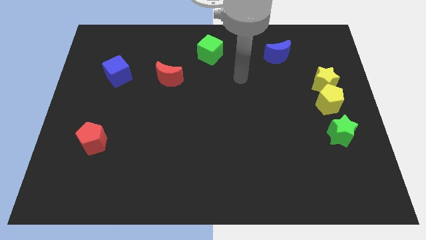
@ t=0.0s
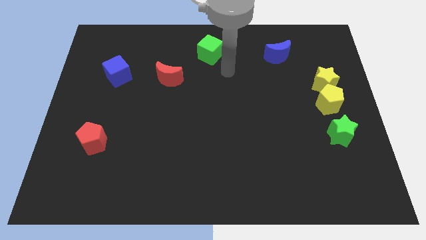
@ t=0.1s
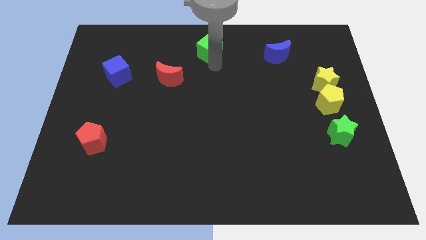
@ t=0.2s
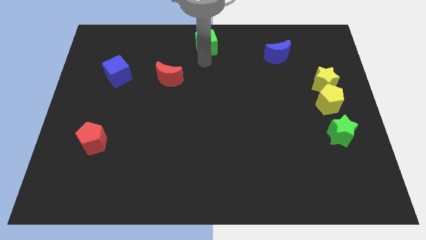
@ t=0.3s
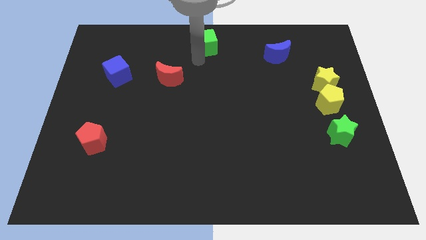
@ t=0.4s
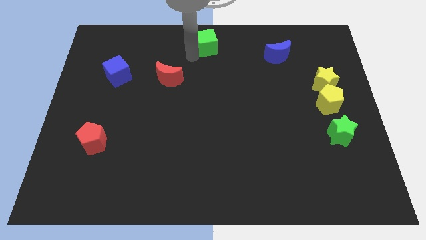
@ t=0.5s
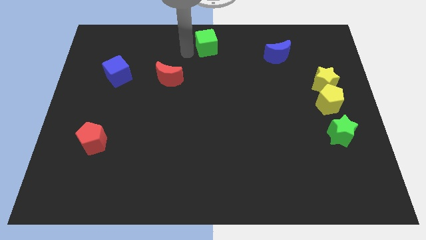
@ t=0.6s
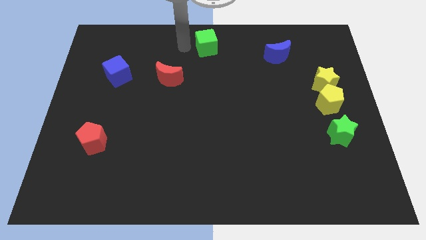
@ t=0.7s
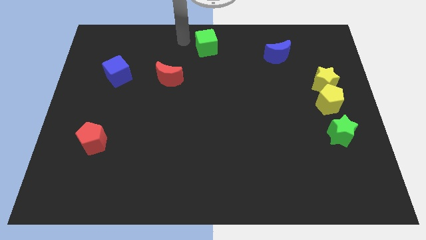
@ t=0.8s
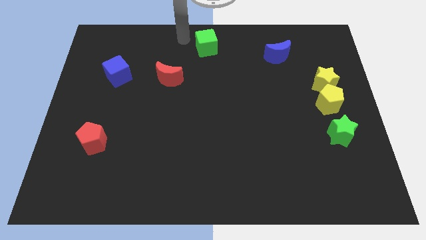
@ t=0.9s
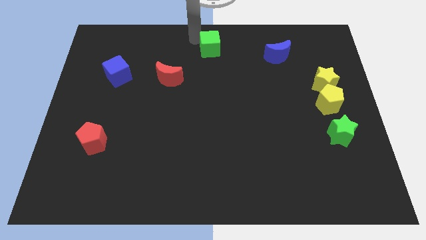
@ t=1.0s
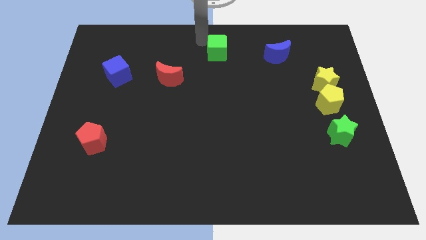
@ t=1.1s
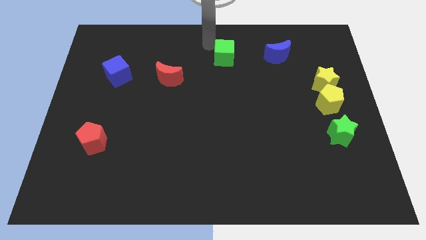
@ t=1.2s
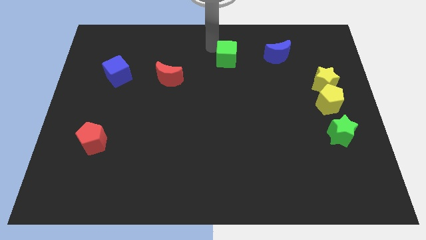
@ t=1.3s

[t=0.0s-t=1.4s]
move the green cube horizontally left to the blue moon

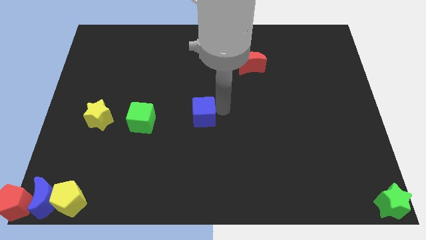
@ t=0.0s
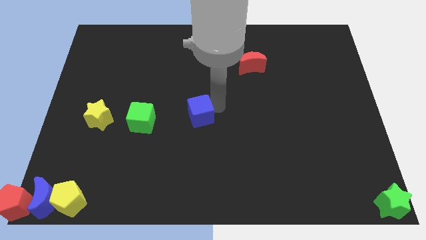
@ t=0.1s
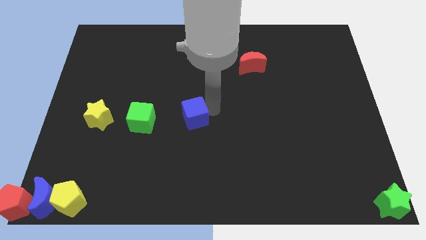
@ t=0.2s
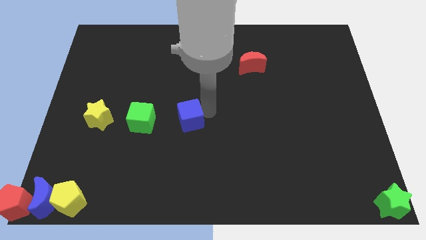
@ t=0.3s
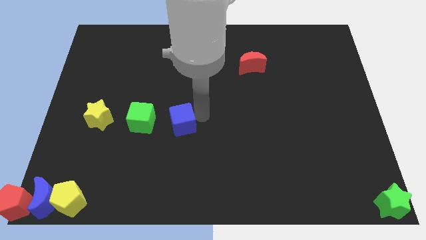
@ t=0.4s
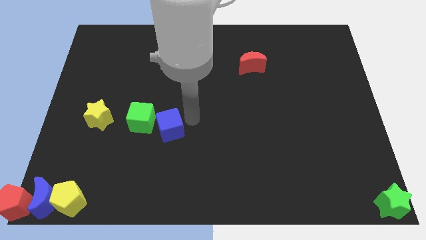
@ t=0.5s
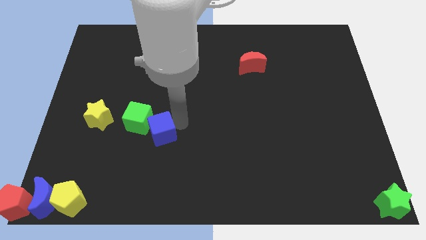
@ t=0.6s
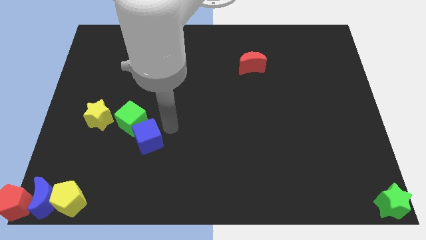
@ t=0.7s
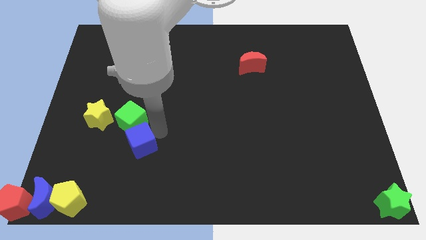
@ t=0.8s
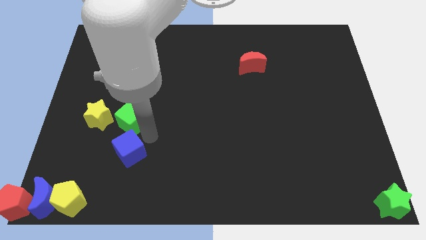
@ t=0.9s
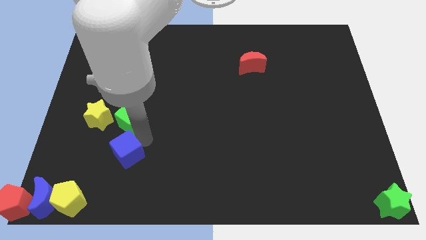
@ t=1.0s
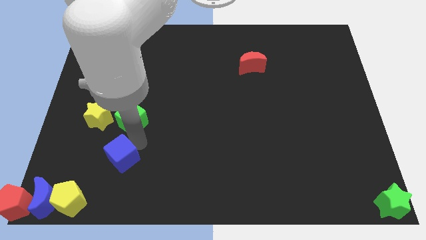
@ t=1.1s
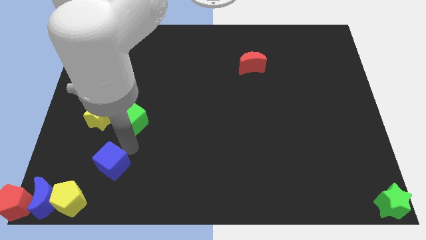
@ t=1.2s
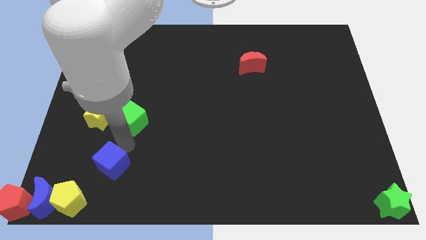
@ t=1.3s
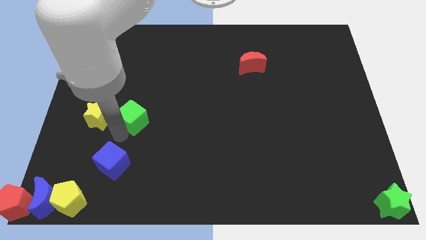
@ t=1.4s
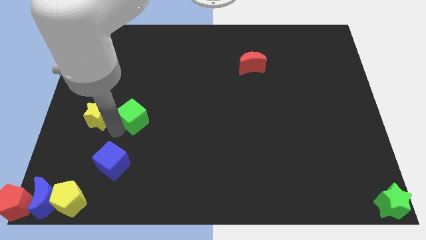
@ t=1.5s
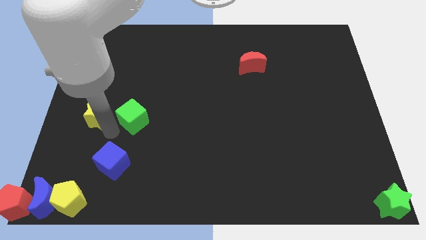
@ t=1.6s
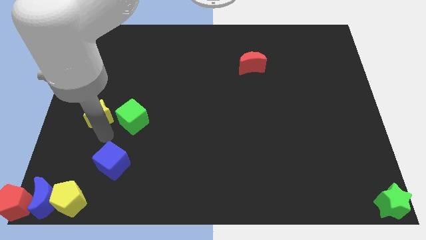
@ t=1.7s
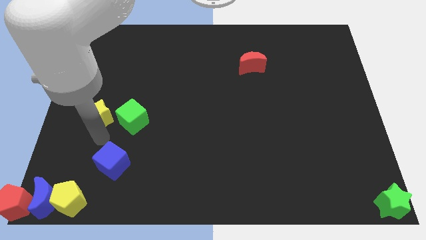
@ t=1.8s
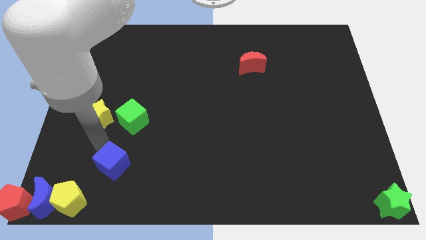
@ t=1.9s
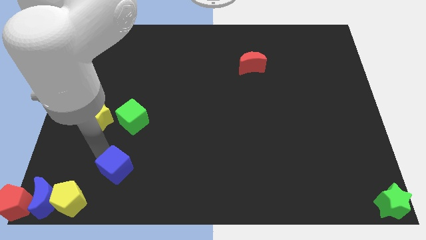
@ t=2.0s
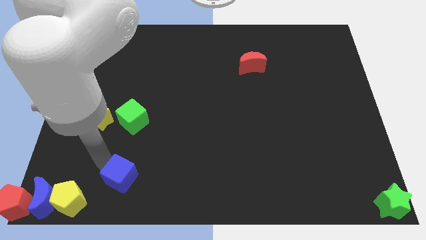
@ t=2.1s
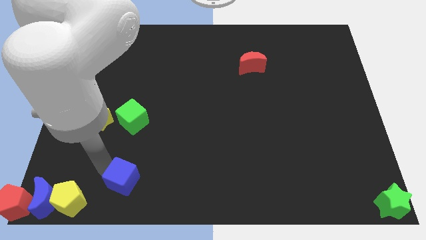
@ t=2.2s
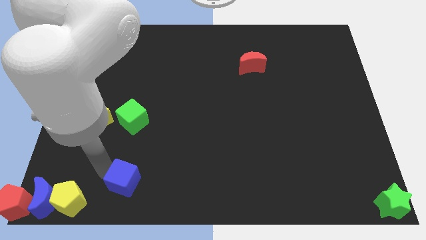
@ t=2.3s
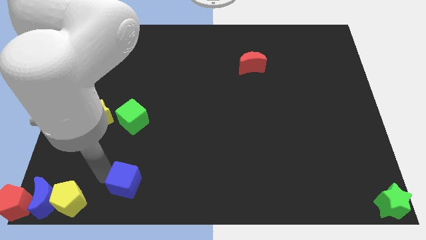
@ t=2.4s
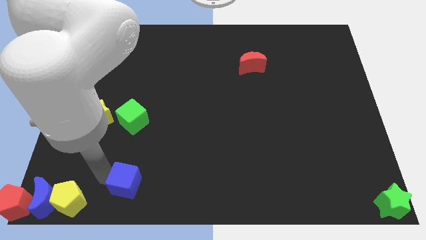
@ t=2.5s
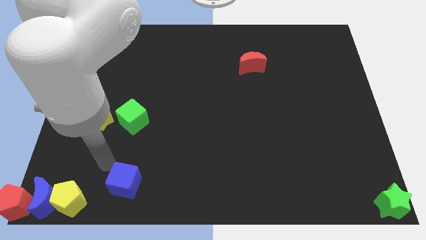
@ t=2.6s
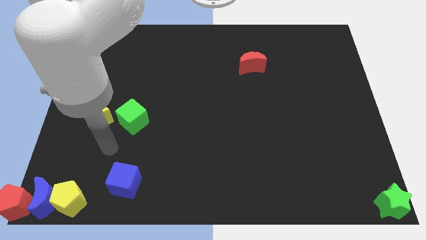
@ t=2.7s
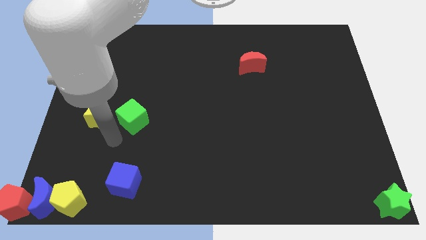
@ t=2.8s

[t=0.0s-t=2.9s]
push the blue cube to the vertical bottom side of the green cube

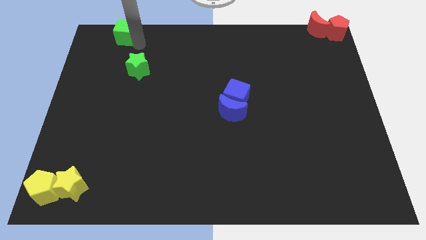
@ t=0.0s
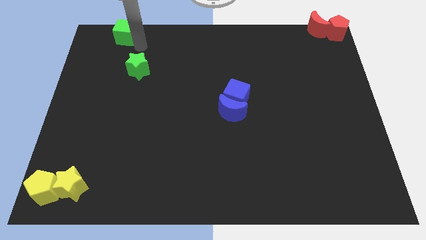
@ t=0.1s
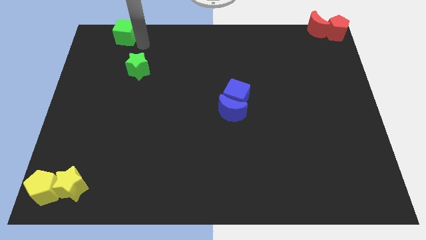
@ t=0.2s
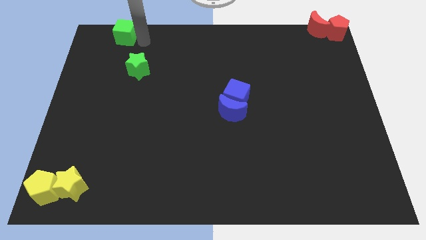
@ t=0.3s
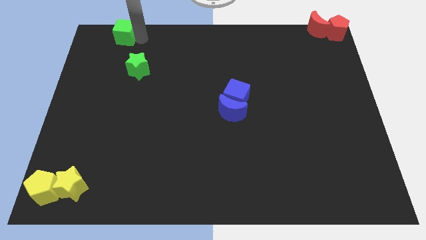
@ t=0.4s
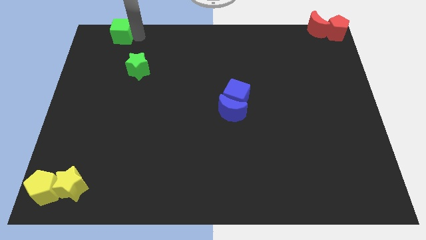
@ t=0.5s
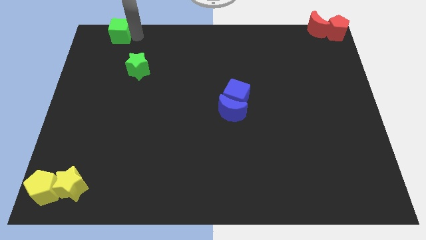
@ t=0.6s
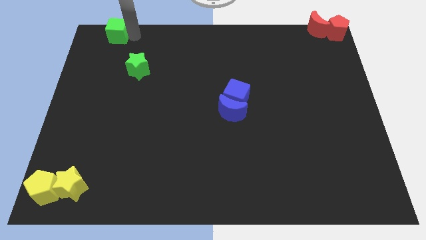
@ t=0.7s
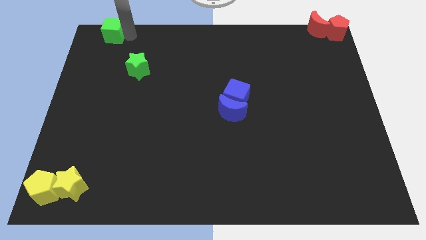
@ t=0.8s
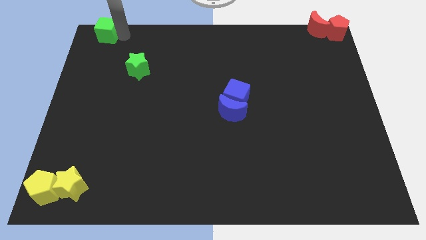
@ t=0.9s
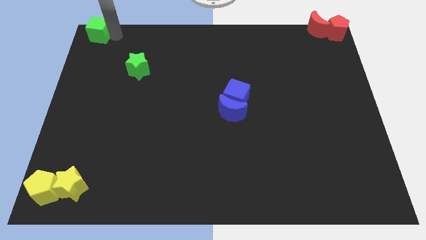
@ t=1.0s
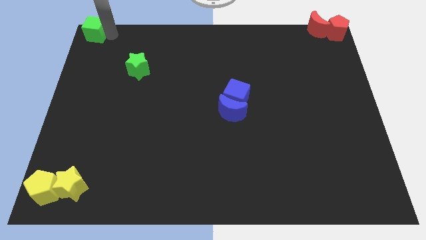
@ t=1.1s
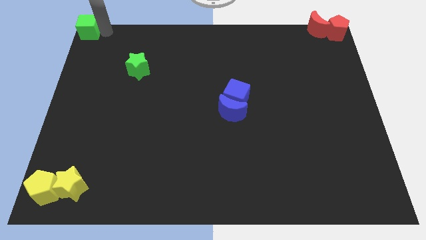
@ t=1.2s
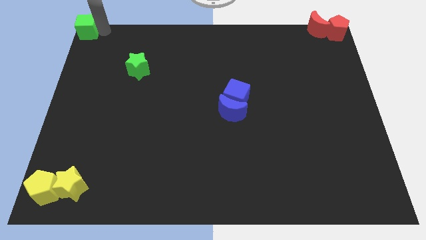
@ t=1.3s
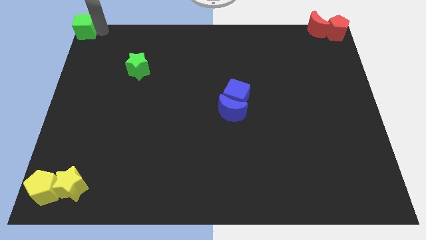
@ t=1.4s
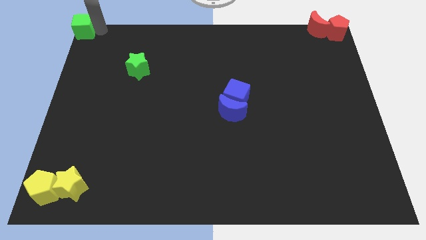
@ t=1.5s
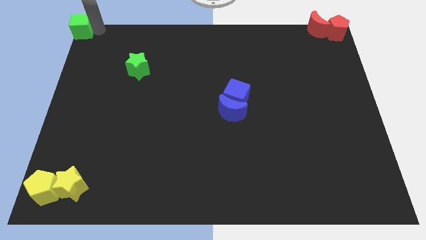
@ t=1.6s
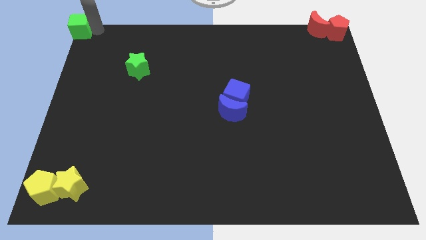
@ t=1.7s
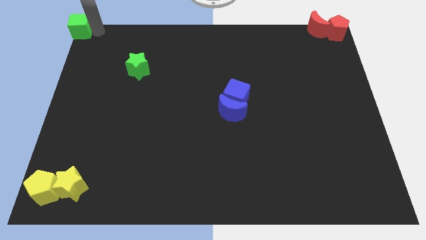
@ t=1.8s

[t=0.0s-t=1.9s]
push the green cube to the top left of the board

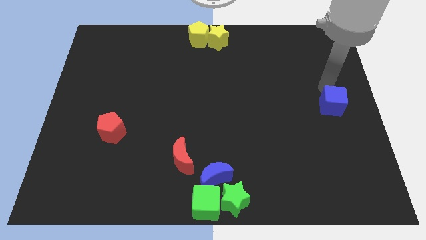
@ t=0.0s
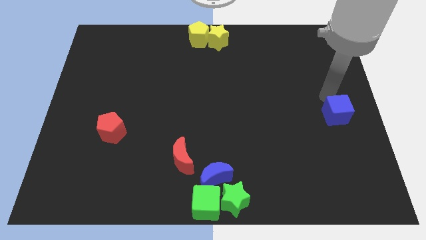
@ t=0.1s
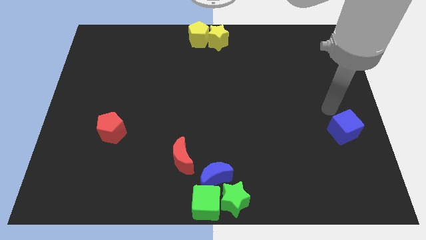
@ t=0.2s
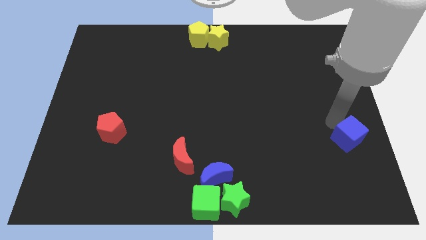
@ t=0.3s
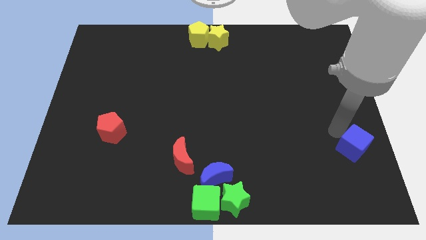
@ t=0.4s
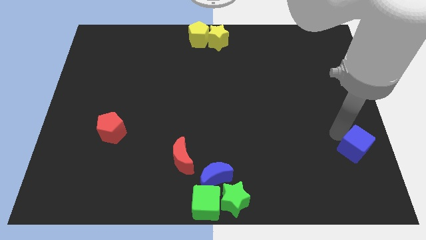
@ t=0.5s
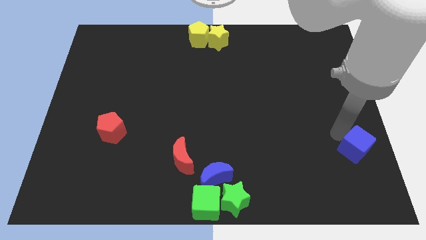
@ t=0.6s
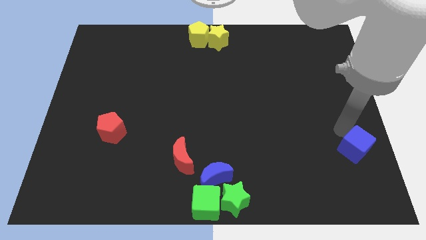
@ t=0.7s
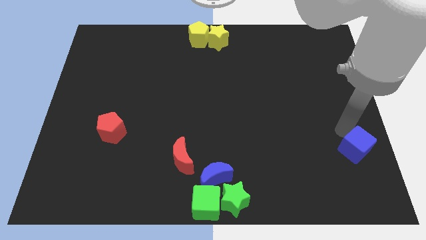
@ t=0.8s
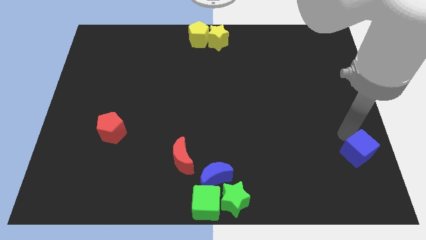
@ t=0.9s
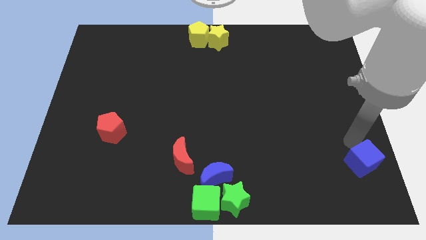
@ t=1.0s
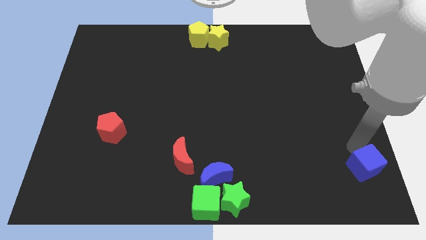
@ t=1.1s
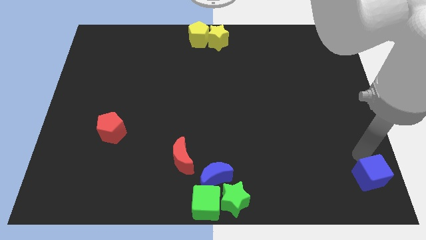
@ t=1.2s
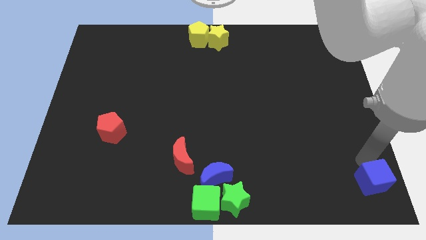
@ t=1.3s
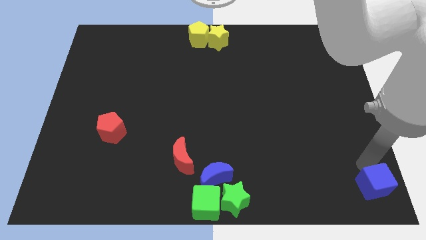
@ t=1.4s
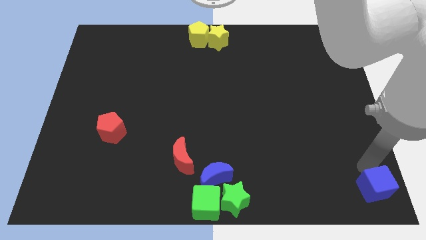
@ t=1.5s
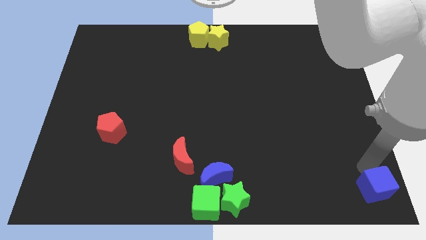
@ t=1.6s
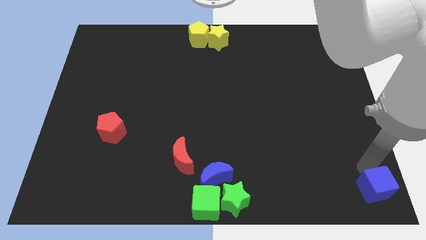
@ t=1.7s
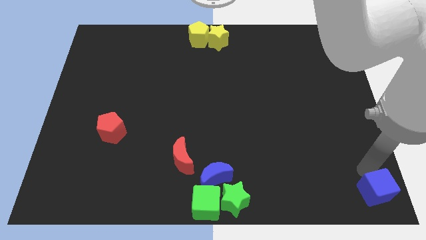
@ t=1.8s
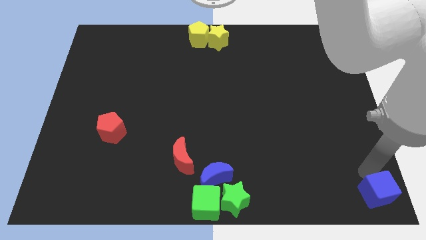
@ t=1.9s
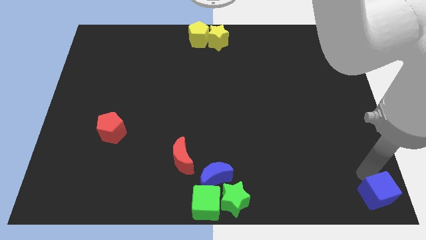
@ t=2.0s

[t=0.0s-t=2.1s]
push blue cube to the right bottom

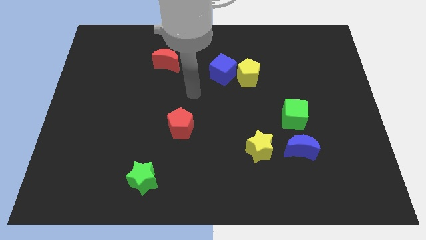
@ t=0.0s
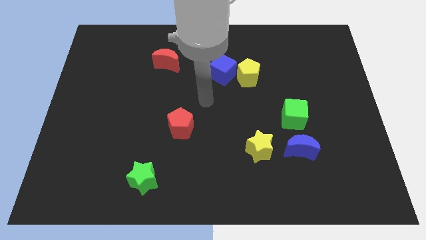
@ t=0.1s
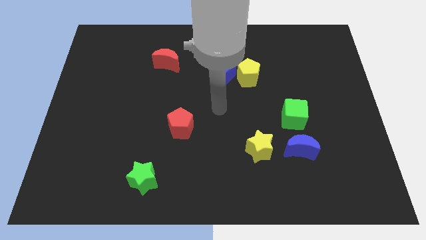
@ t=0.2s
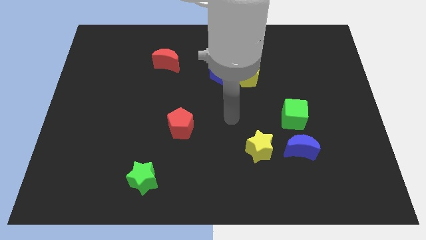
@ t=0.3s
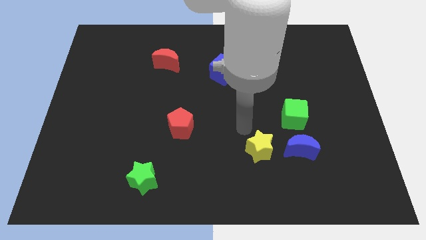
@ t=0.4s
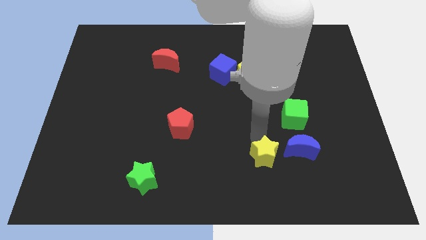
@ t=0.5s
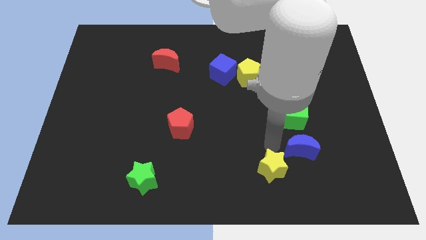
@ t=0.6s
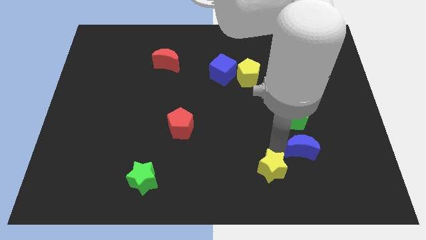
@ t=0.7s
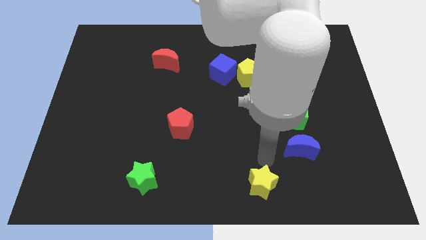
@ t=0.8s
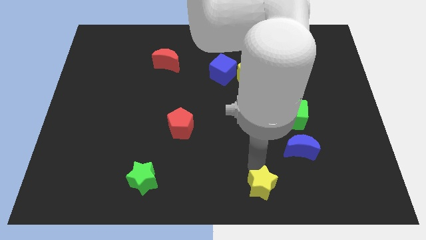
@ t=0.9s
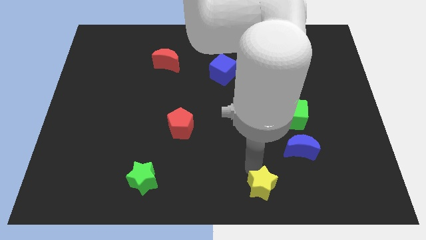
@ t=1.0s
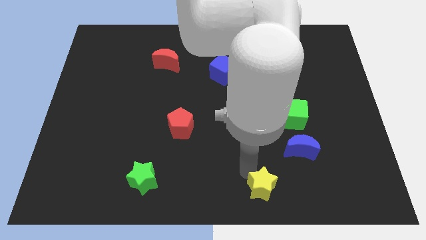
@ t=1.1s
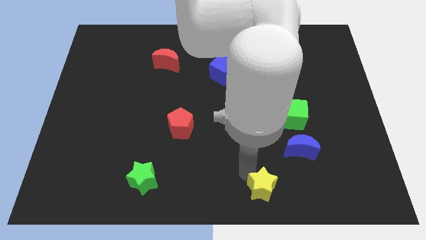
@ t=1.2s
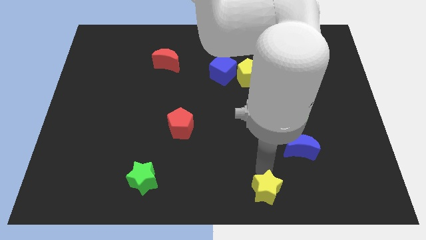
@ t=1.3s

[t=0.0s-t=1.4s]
move the yellow star to the bottom of the board
